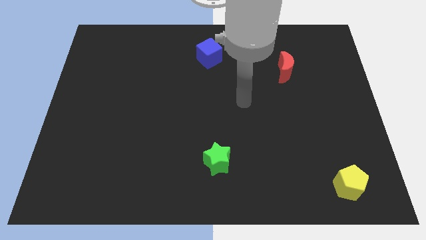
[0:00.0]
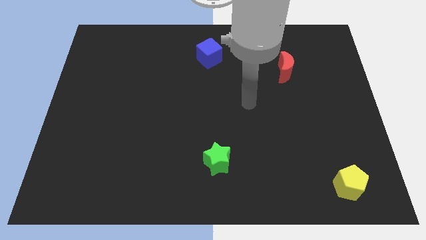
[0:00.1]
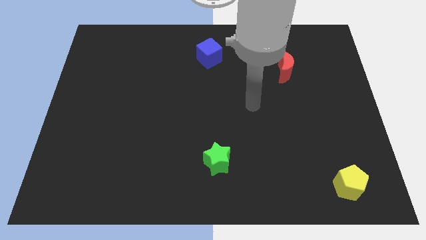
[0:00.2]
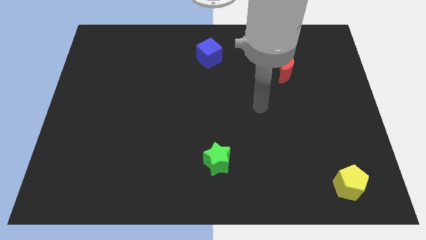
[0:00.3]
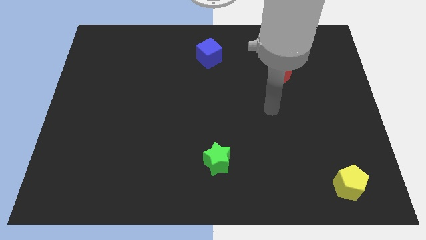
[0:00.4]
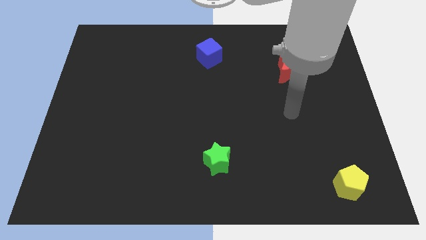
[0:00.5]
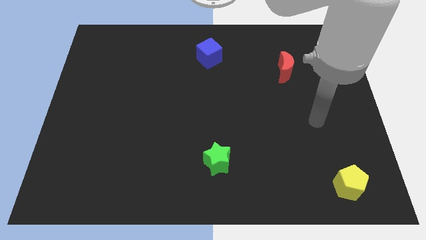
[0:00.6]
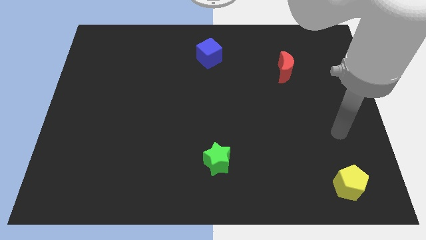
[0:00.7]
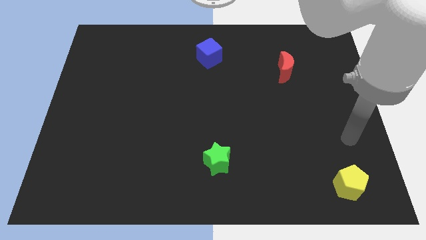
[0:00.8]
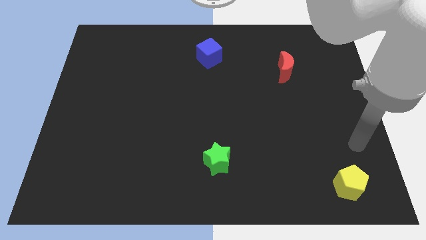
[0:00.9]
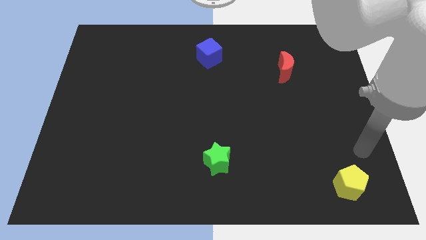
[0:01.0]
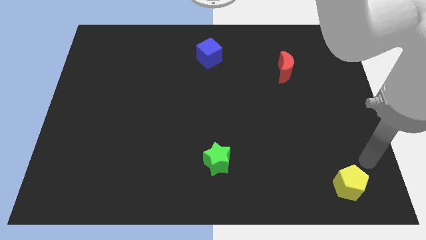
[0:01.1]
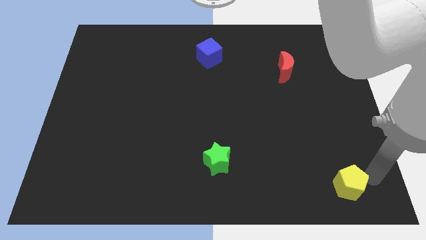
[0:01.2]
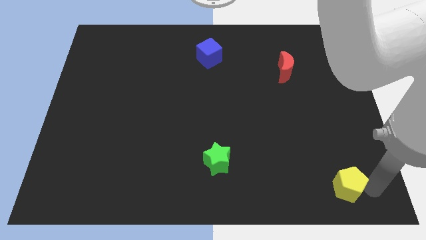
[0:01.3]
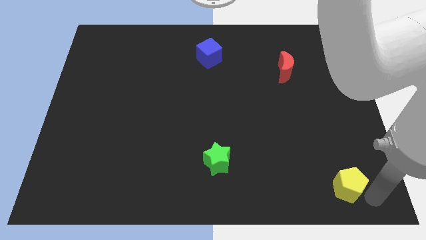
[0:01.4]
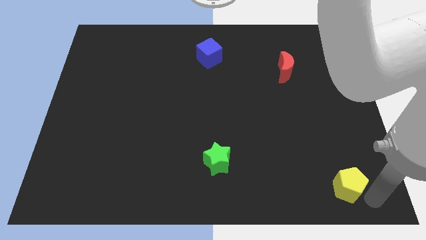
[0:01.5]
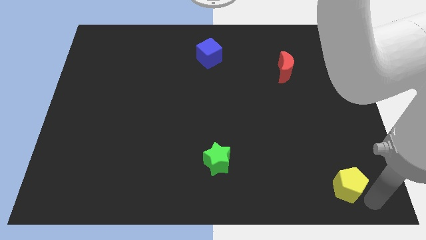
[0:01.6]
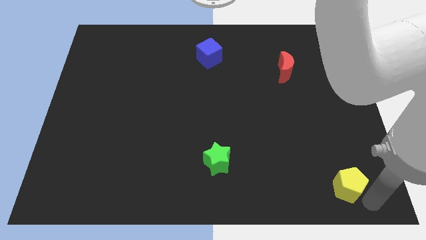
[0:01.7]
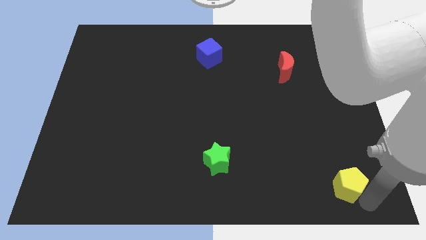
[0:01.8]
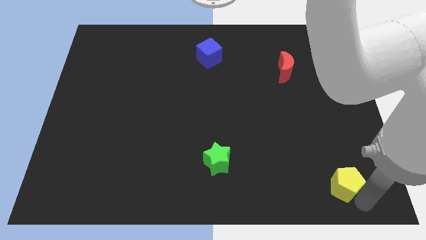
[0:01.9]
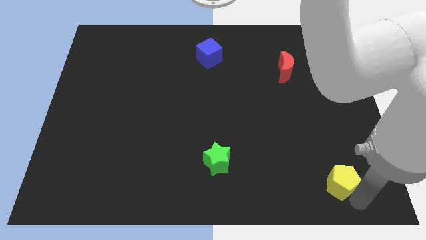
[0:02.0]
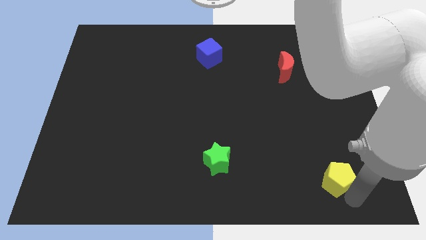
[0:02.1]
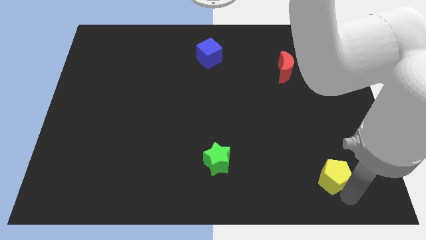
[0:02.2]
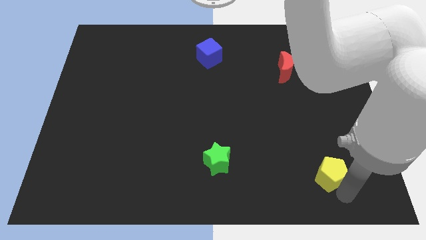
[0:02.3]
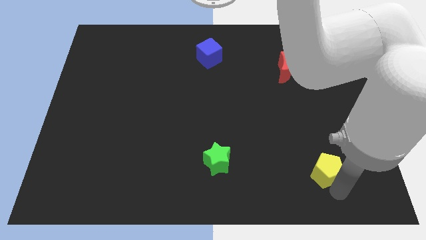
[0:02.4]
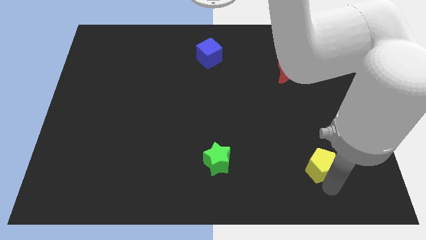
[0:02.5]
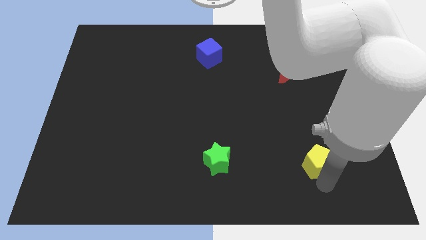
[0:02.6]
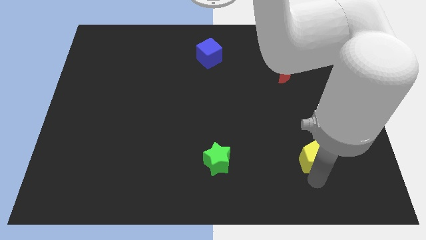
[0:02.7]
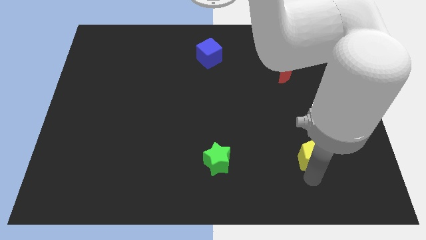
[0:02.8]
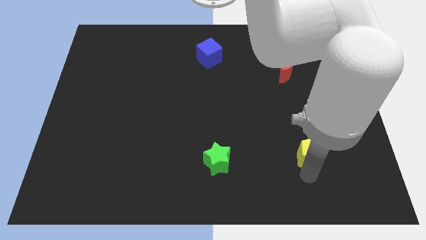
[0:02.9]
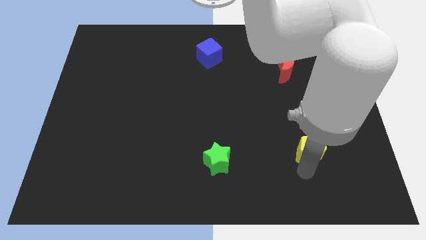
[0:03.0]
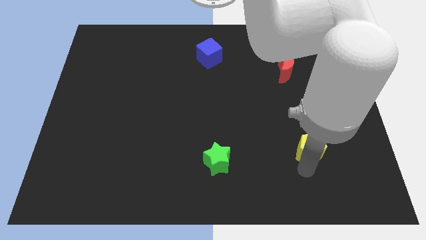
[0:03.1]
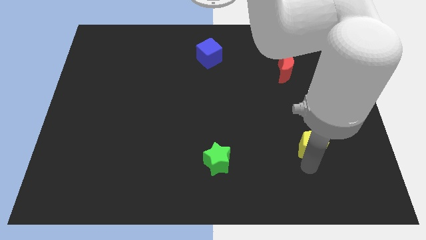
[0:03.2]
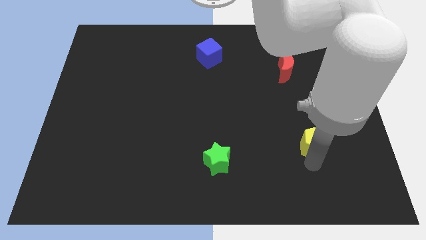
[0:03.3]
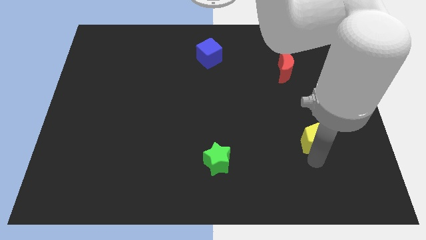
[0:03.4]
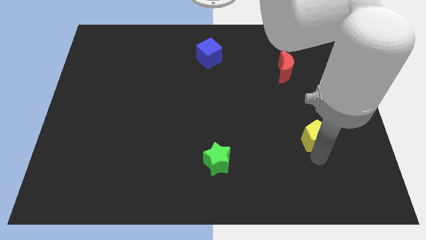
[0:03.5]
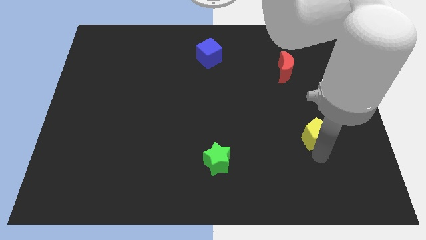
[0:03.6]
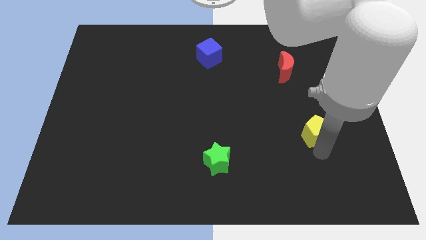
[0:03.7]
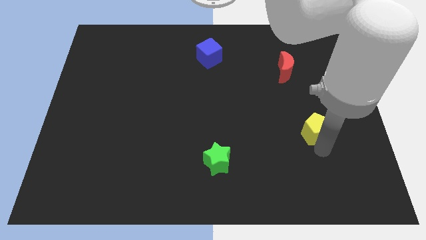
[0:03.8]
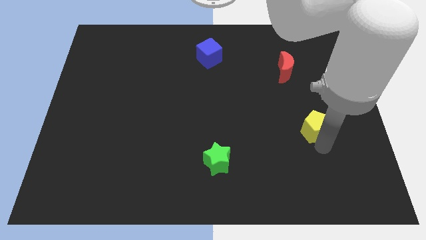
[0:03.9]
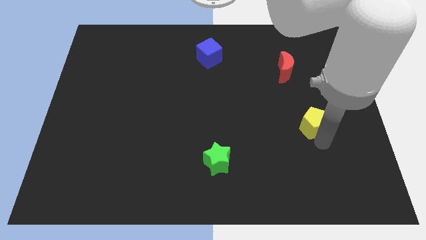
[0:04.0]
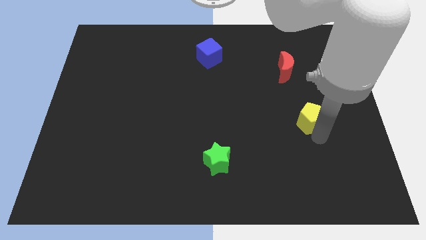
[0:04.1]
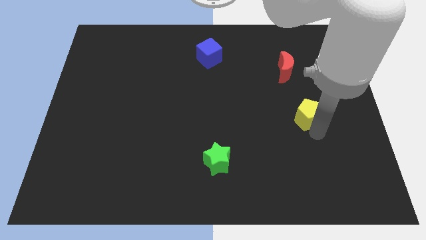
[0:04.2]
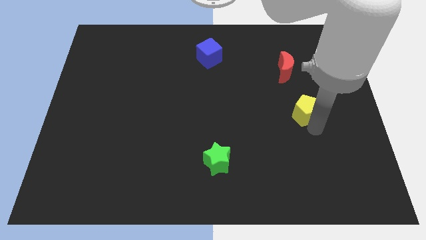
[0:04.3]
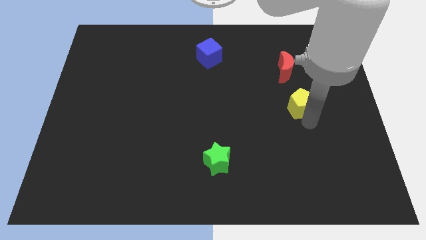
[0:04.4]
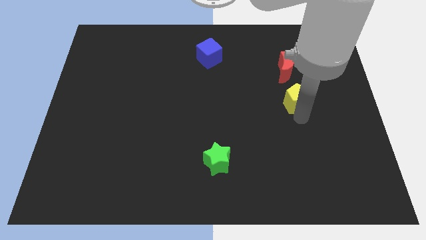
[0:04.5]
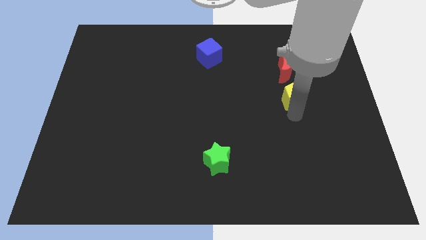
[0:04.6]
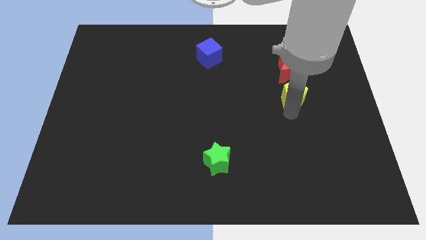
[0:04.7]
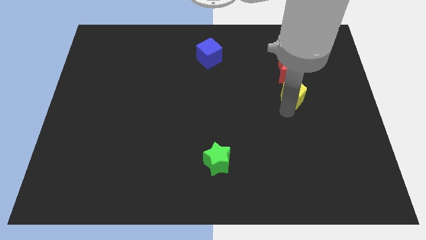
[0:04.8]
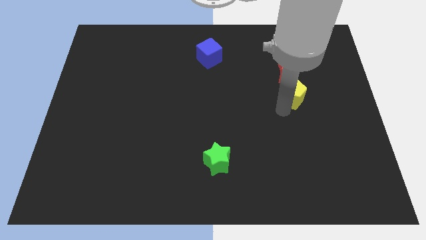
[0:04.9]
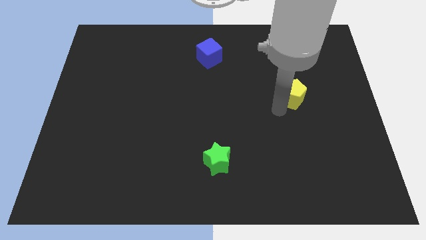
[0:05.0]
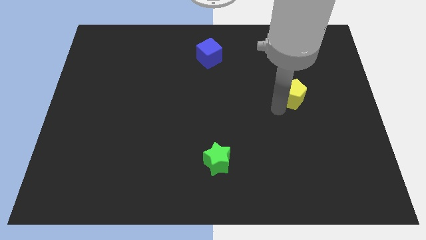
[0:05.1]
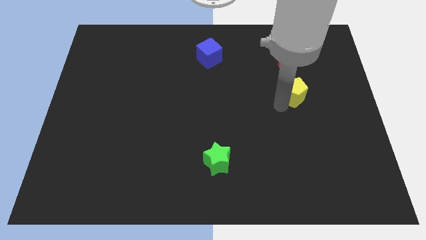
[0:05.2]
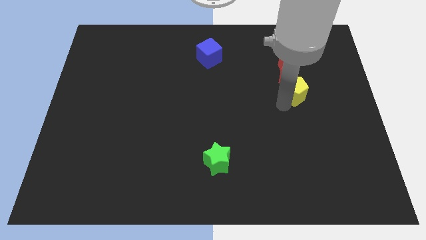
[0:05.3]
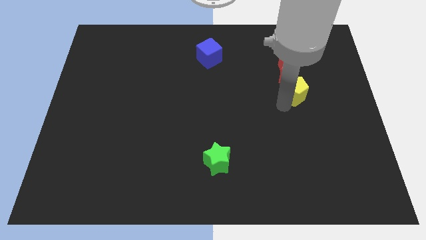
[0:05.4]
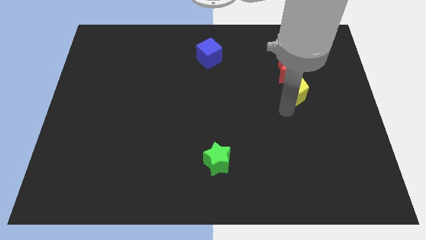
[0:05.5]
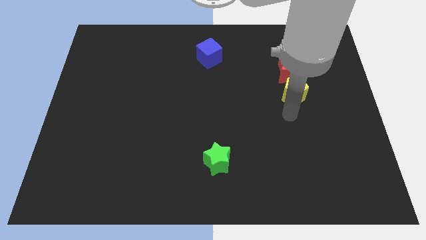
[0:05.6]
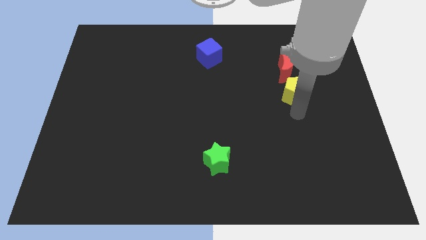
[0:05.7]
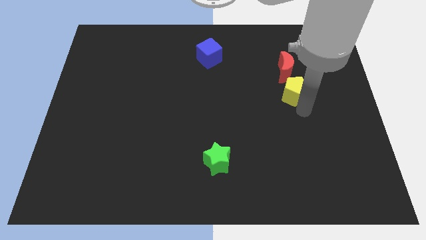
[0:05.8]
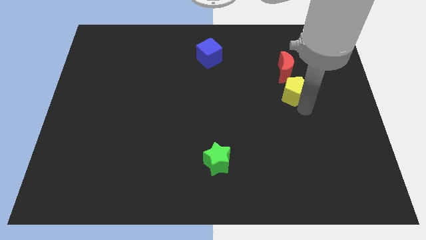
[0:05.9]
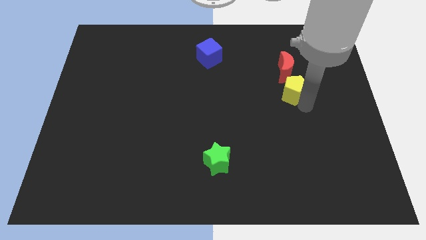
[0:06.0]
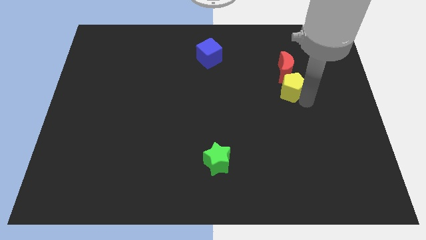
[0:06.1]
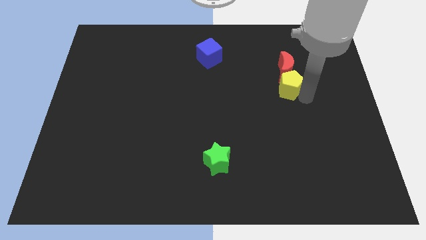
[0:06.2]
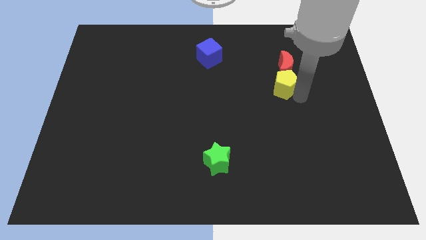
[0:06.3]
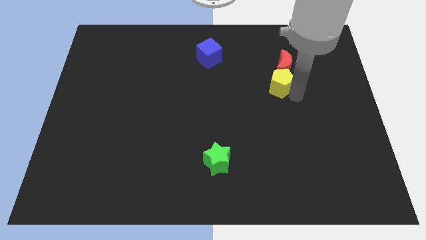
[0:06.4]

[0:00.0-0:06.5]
push the pentagon close to the moon

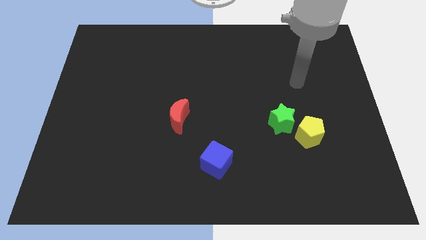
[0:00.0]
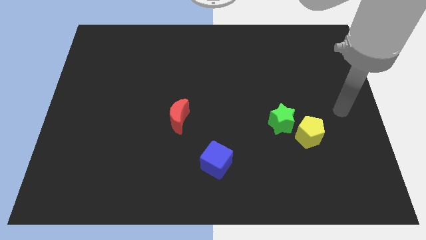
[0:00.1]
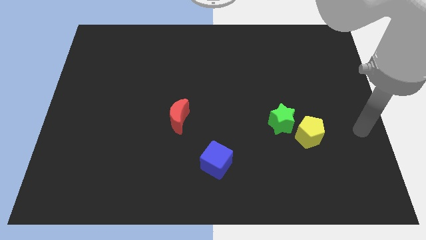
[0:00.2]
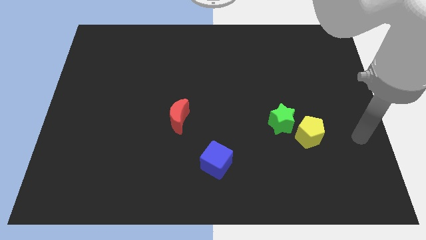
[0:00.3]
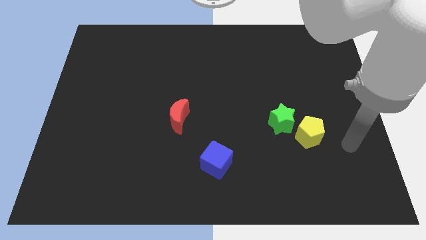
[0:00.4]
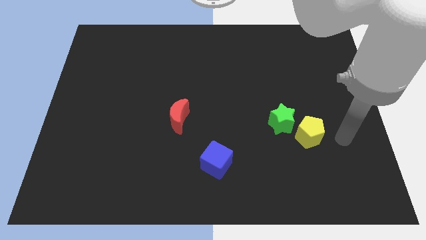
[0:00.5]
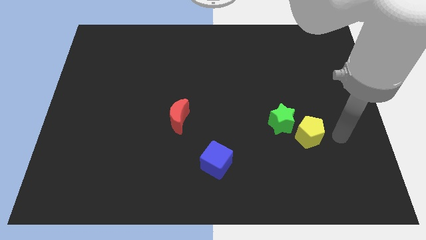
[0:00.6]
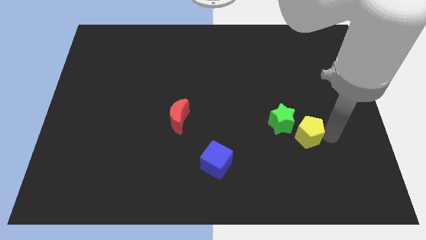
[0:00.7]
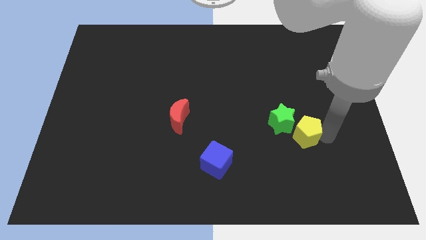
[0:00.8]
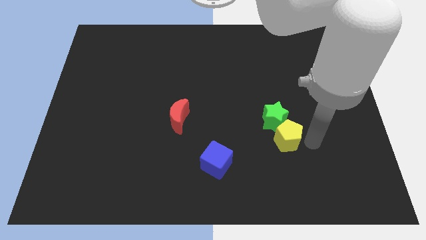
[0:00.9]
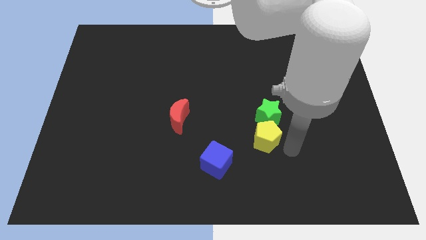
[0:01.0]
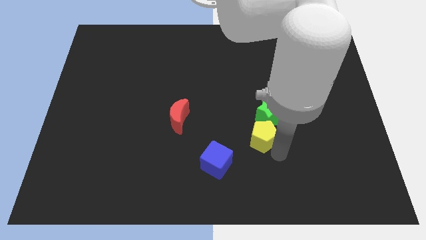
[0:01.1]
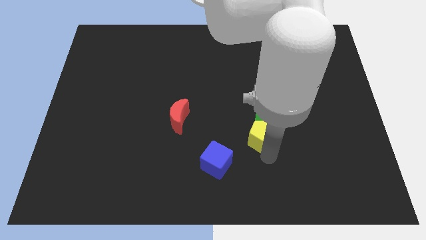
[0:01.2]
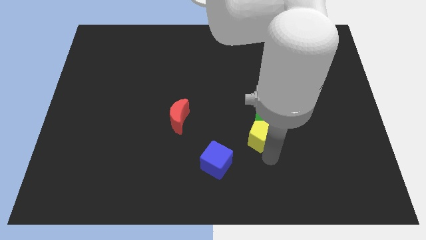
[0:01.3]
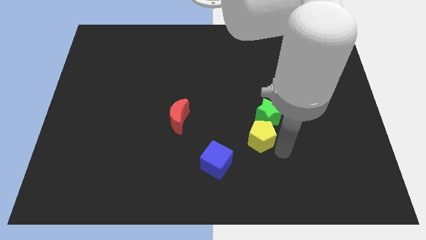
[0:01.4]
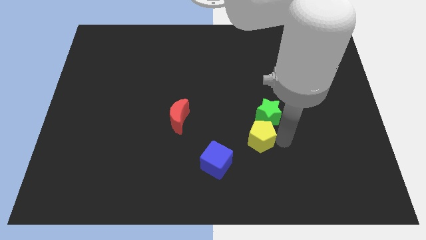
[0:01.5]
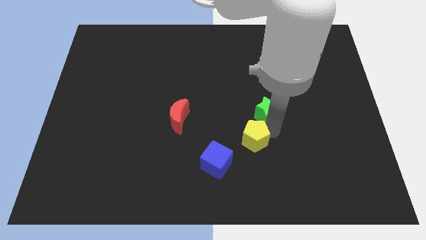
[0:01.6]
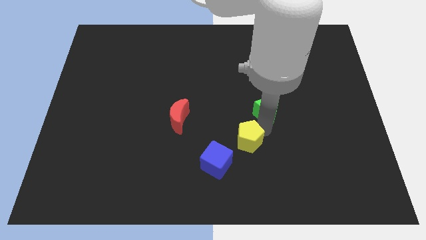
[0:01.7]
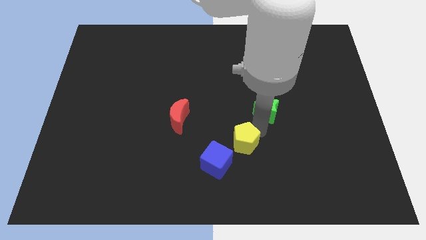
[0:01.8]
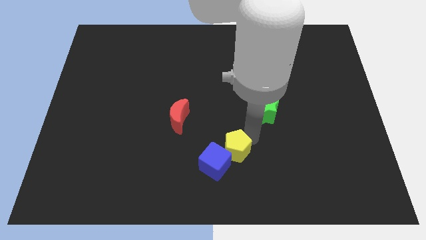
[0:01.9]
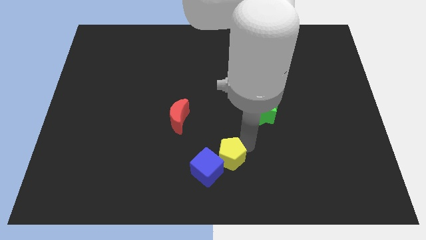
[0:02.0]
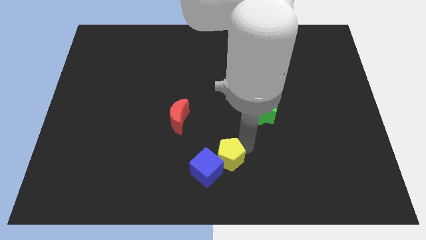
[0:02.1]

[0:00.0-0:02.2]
slide the pentagon close to the cube
